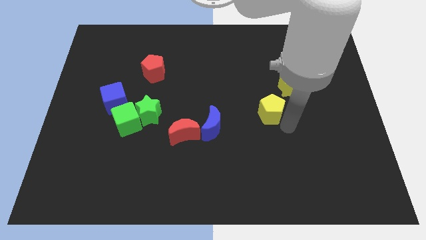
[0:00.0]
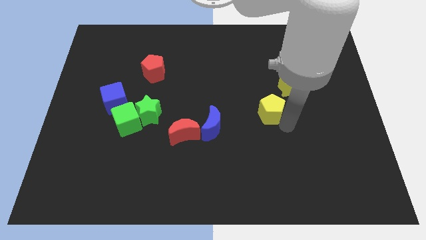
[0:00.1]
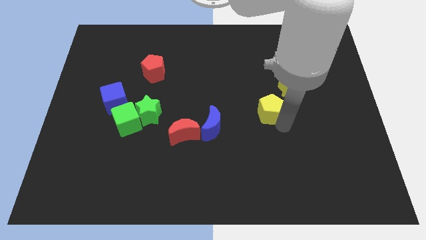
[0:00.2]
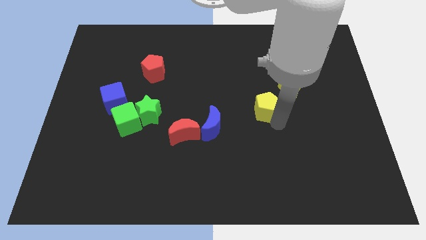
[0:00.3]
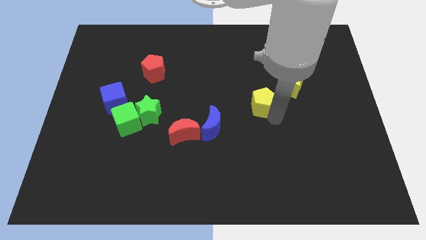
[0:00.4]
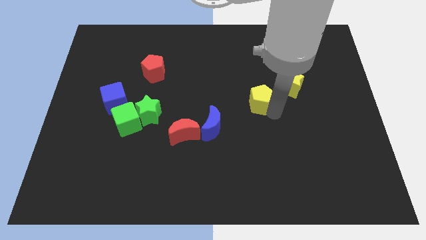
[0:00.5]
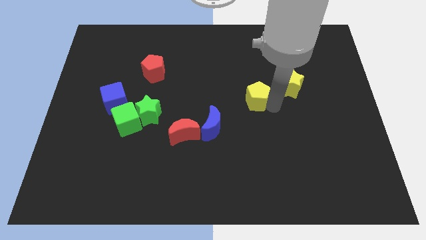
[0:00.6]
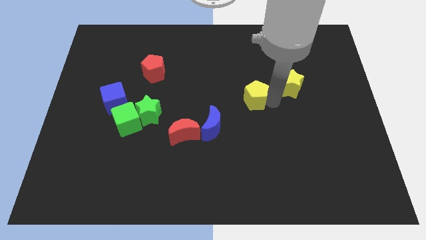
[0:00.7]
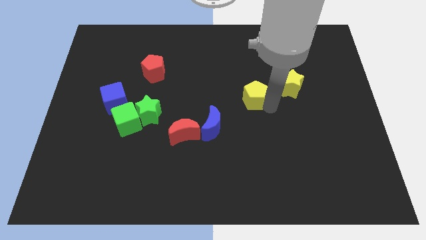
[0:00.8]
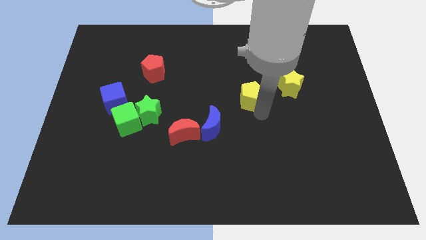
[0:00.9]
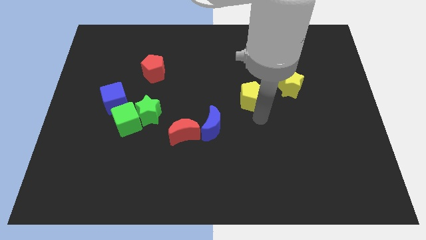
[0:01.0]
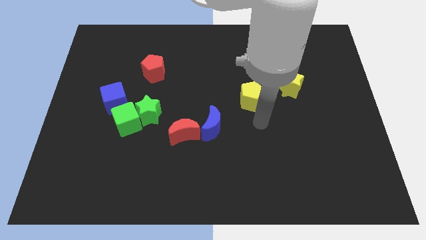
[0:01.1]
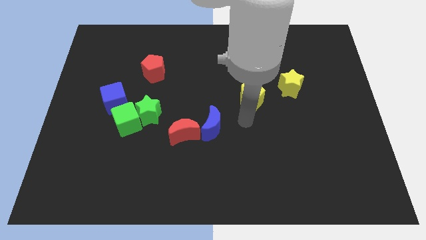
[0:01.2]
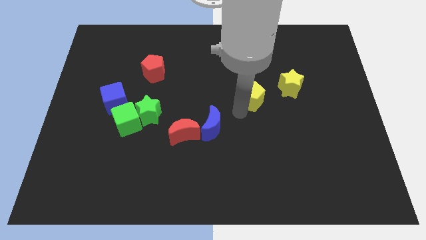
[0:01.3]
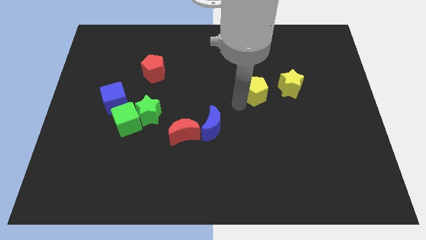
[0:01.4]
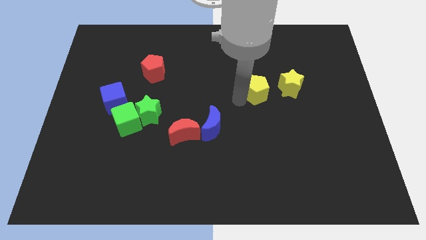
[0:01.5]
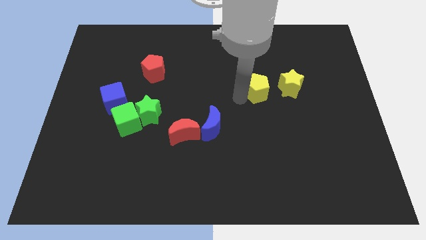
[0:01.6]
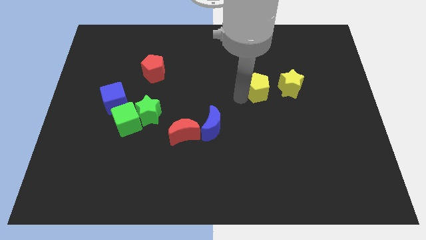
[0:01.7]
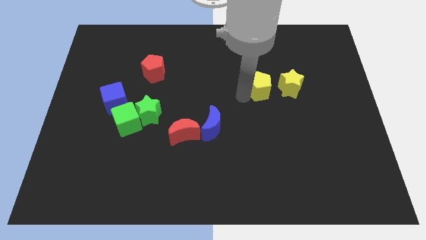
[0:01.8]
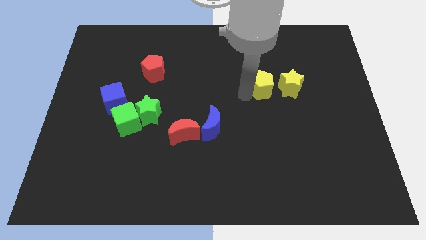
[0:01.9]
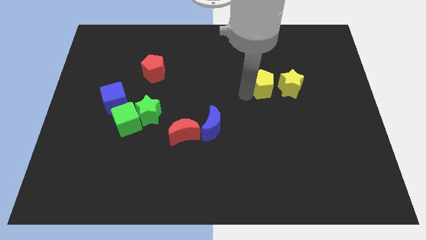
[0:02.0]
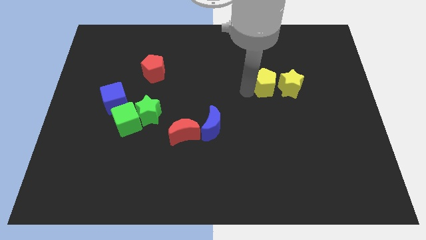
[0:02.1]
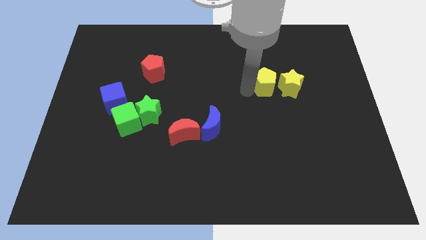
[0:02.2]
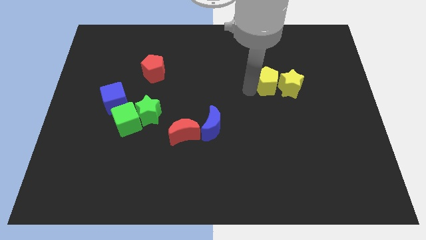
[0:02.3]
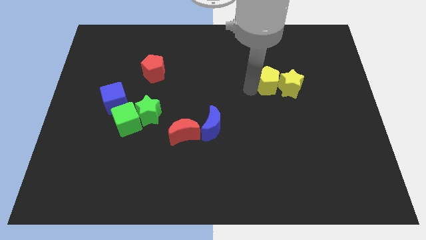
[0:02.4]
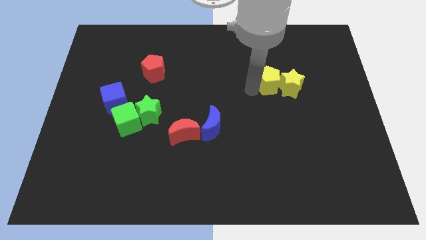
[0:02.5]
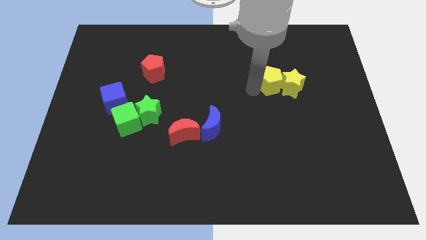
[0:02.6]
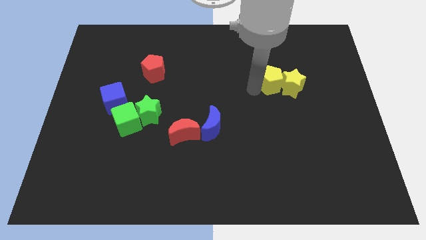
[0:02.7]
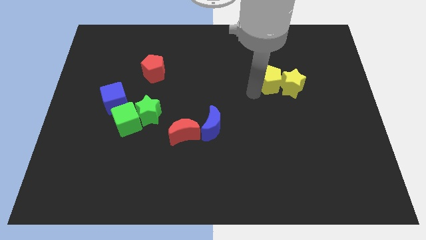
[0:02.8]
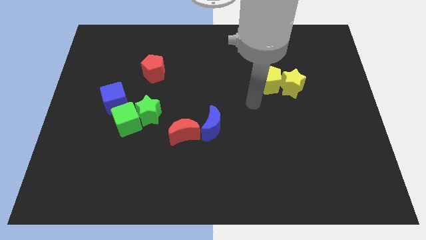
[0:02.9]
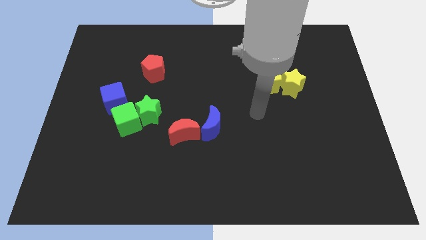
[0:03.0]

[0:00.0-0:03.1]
move yellow pentagon into the yellow star

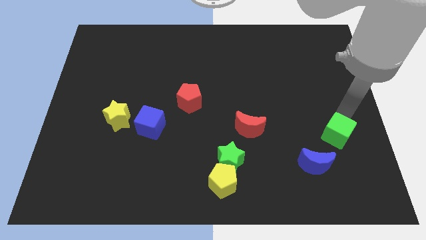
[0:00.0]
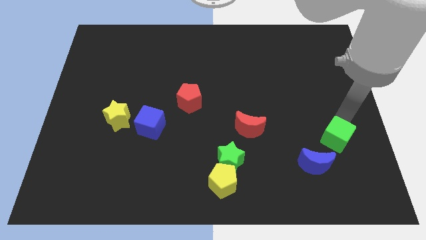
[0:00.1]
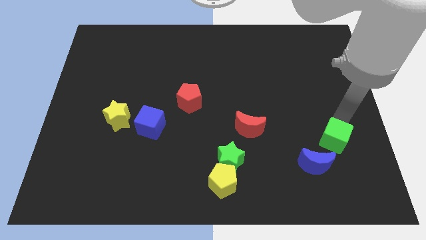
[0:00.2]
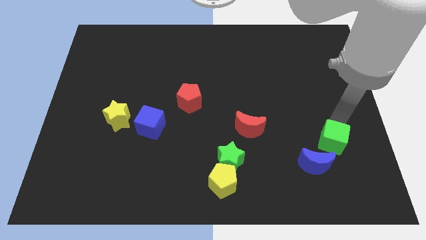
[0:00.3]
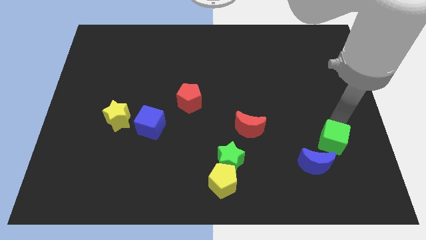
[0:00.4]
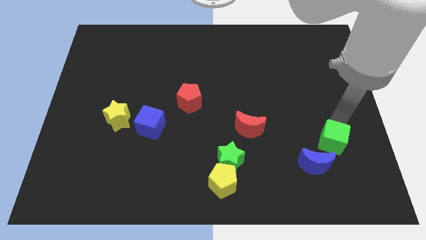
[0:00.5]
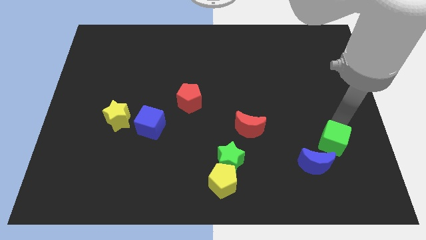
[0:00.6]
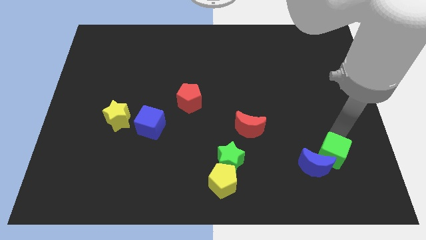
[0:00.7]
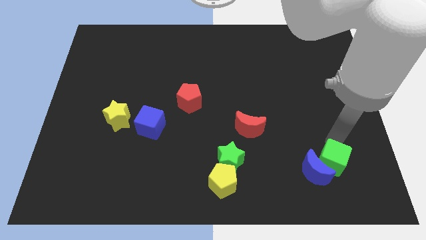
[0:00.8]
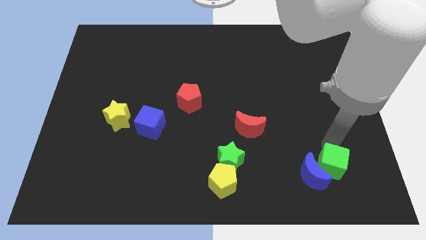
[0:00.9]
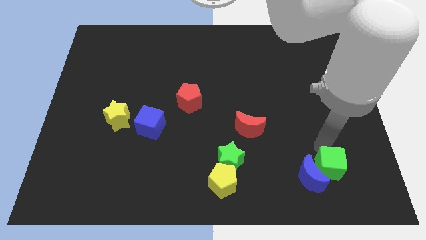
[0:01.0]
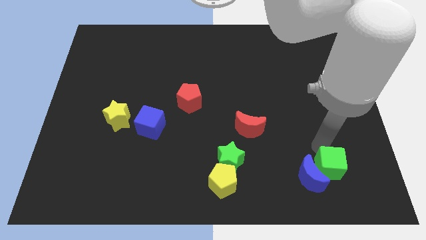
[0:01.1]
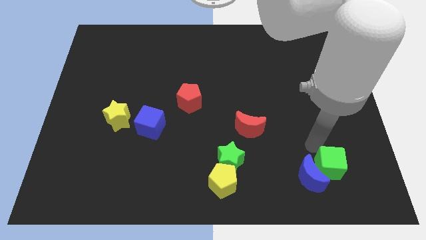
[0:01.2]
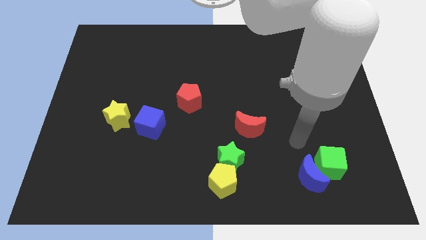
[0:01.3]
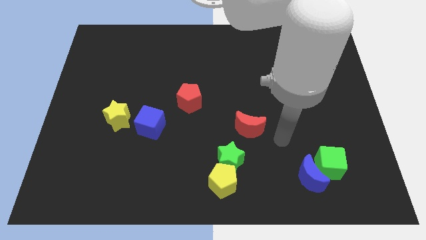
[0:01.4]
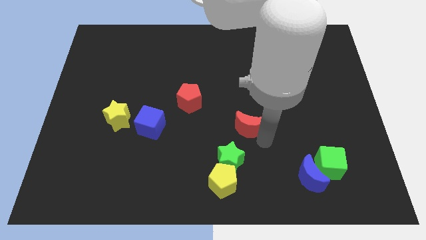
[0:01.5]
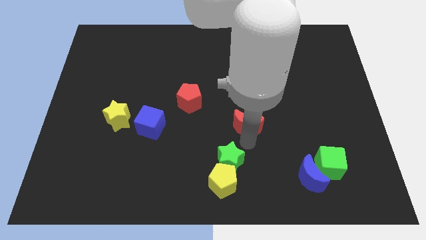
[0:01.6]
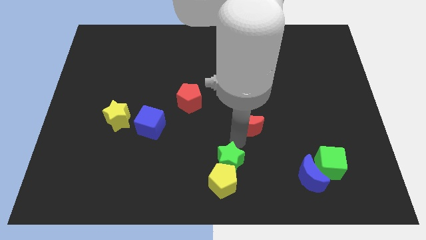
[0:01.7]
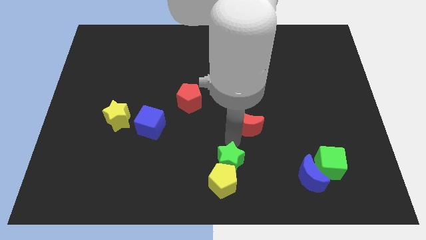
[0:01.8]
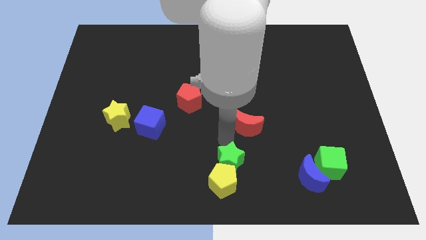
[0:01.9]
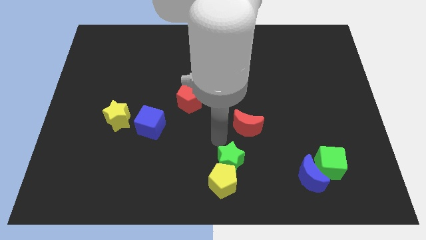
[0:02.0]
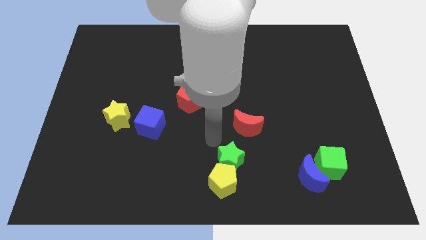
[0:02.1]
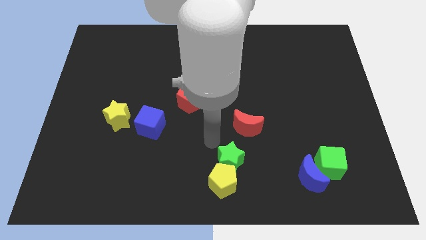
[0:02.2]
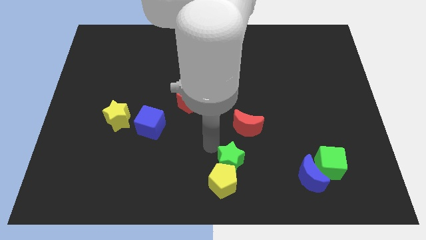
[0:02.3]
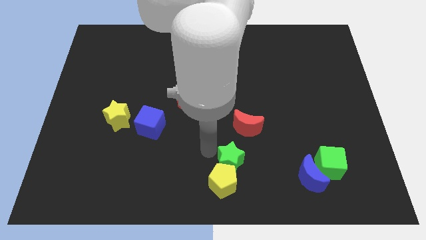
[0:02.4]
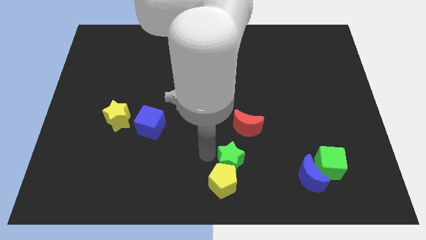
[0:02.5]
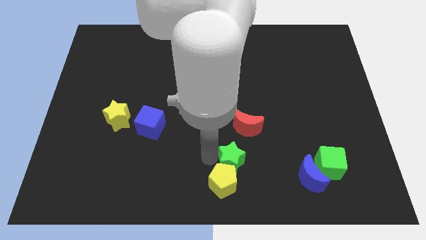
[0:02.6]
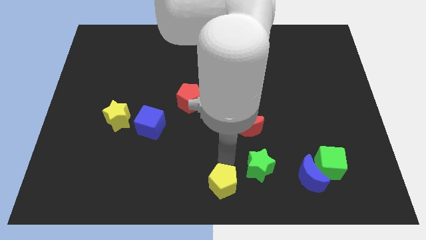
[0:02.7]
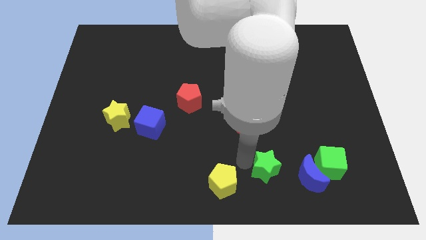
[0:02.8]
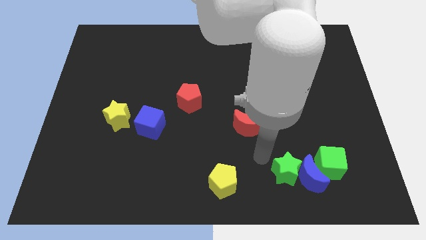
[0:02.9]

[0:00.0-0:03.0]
separate the green star from the yellow pentagon

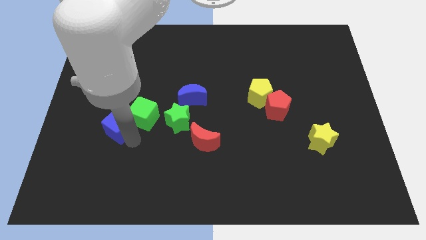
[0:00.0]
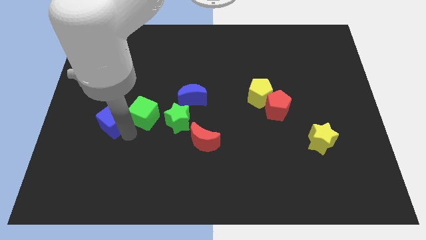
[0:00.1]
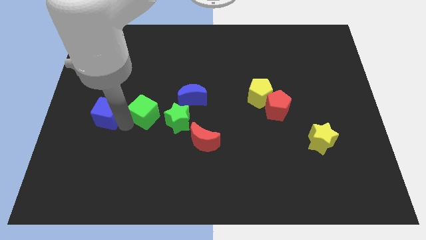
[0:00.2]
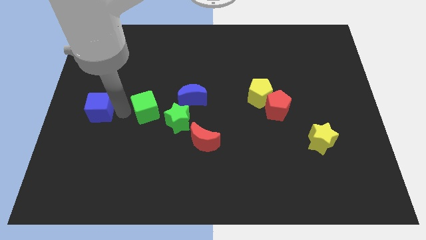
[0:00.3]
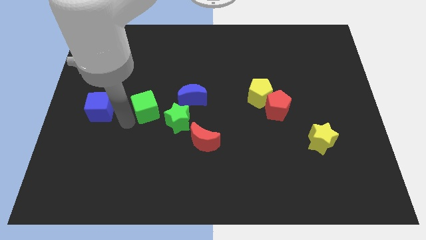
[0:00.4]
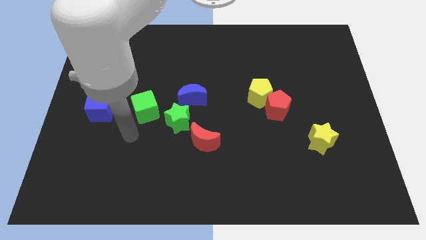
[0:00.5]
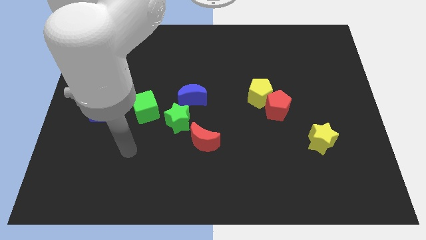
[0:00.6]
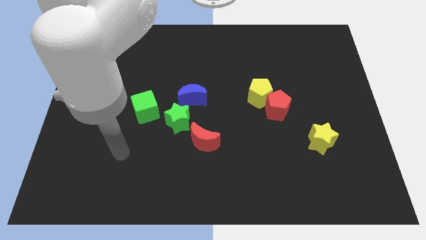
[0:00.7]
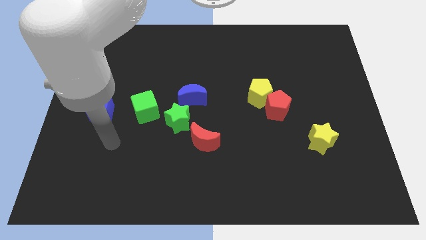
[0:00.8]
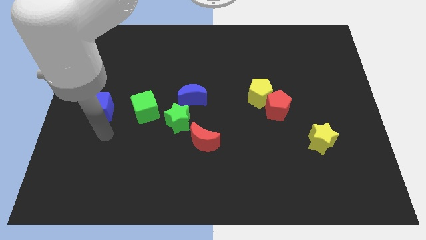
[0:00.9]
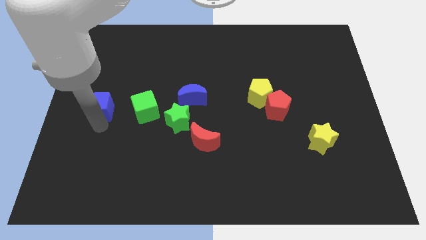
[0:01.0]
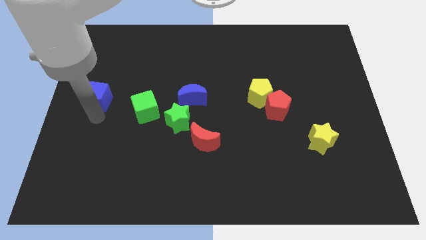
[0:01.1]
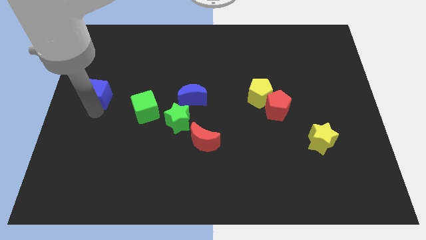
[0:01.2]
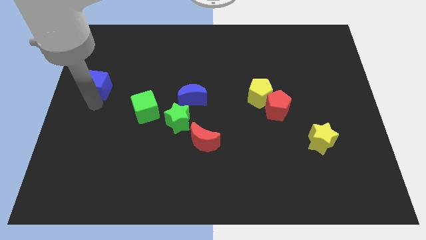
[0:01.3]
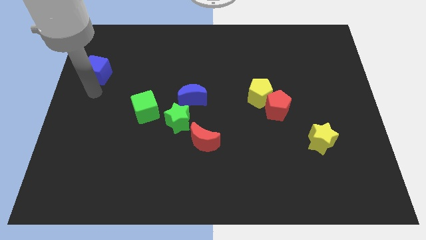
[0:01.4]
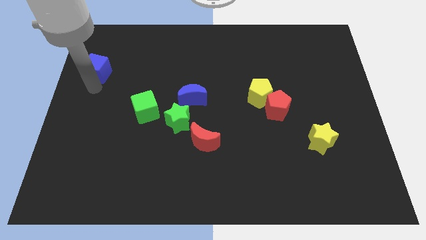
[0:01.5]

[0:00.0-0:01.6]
separate the blue cube from green cube

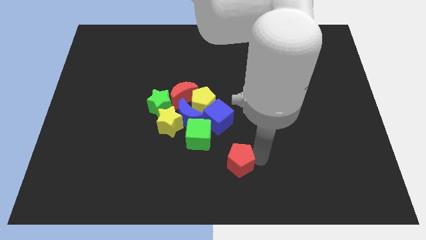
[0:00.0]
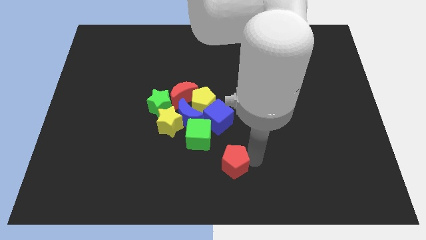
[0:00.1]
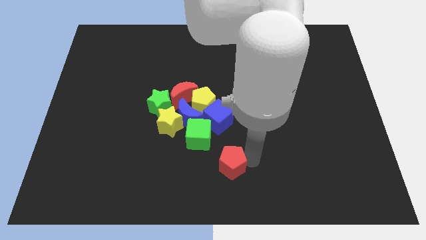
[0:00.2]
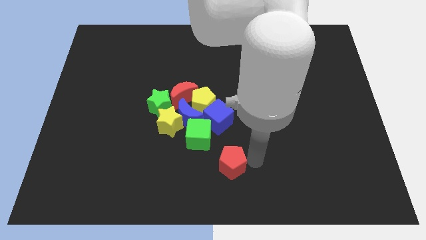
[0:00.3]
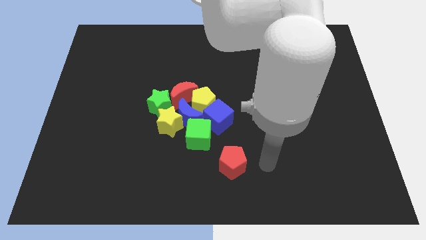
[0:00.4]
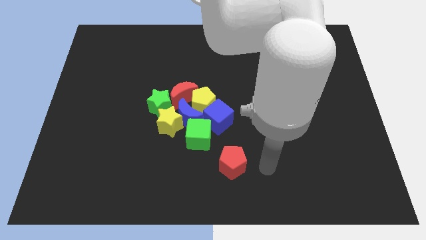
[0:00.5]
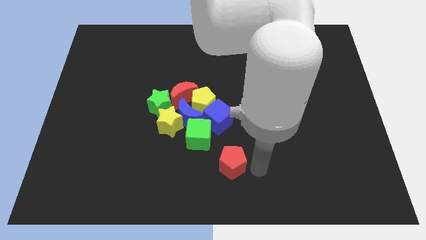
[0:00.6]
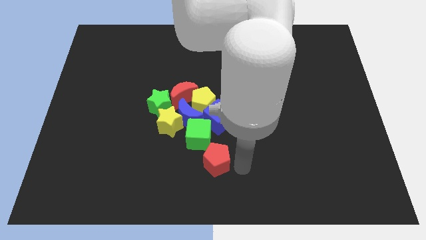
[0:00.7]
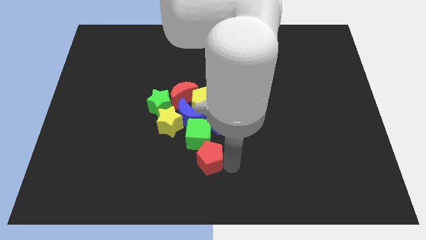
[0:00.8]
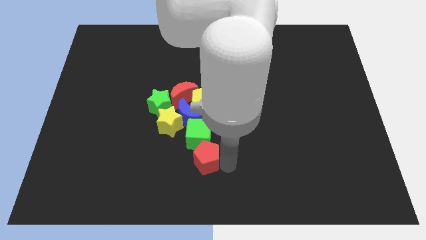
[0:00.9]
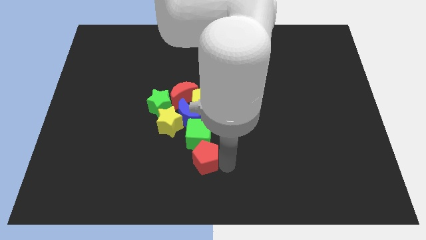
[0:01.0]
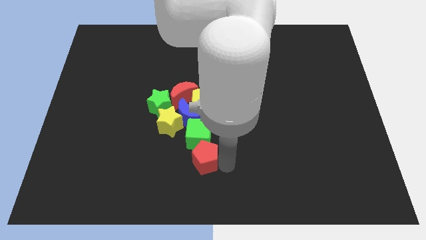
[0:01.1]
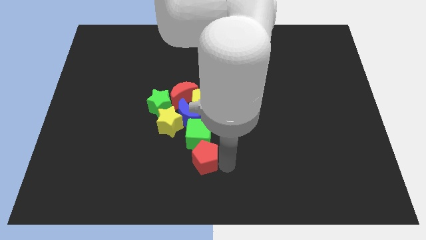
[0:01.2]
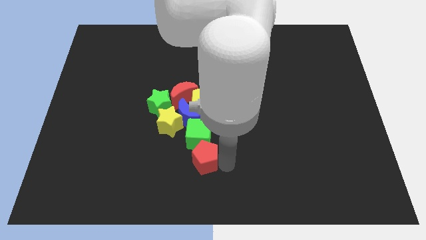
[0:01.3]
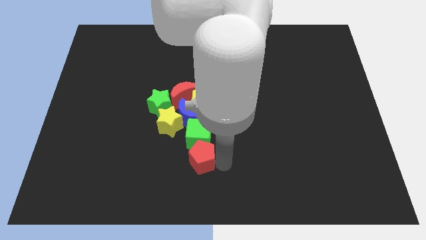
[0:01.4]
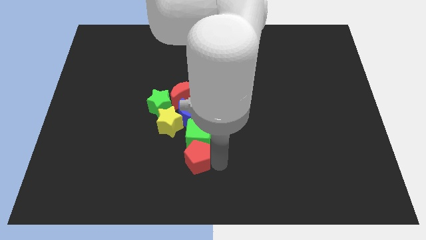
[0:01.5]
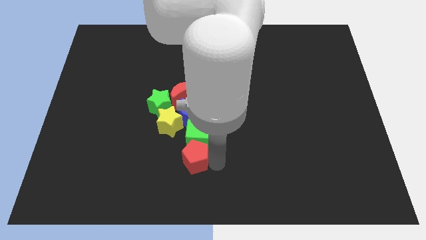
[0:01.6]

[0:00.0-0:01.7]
move the red pentagon towards left a bit
